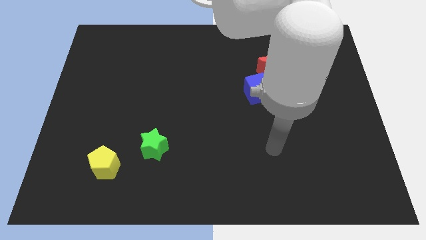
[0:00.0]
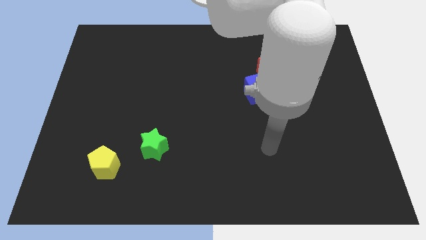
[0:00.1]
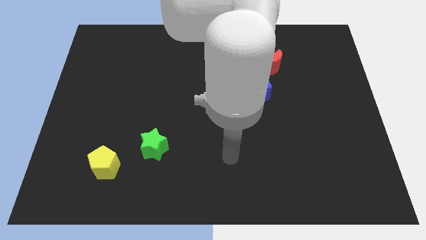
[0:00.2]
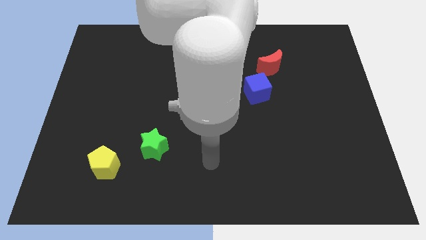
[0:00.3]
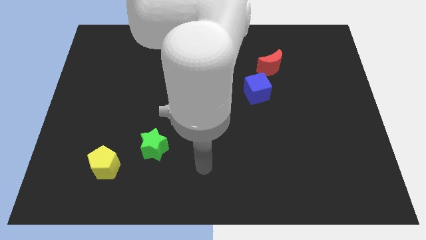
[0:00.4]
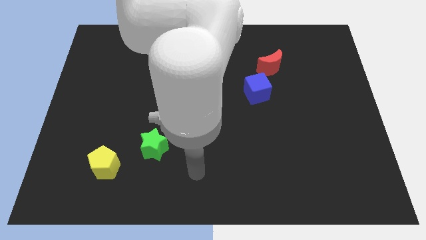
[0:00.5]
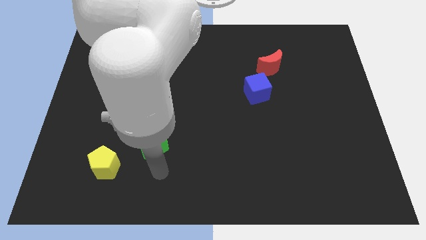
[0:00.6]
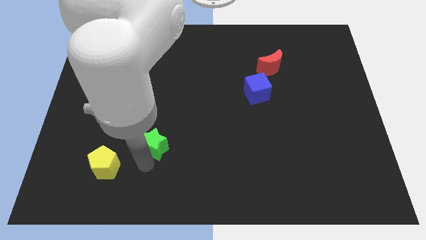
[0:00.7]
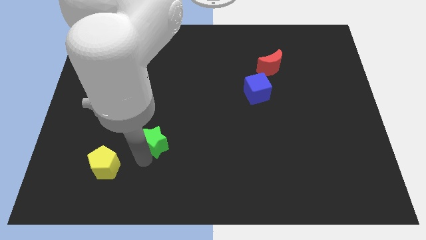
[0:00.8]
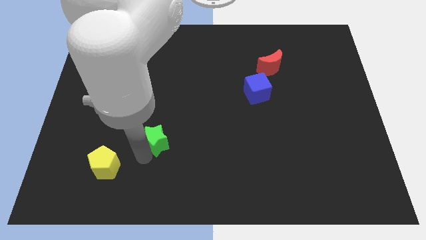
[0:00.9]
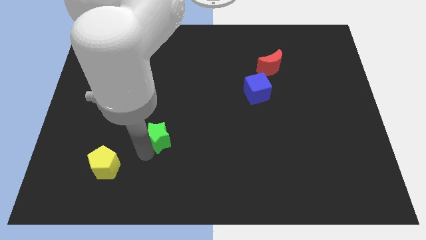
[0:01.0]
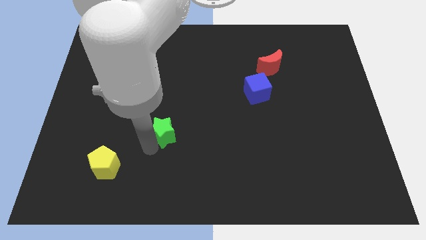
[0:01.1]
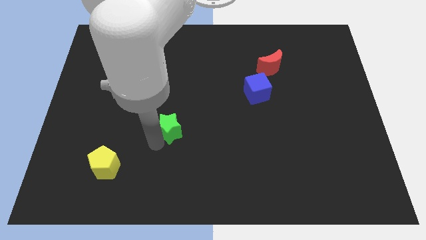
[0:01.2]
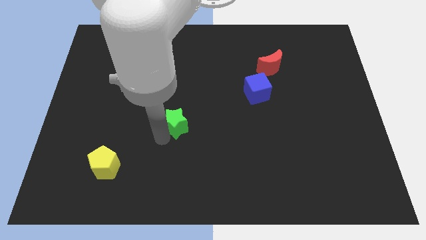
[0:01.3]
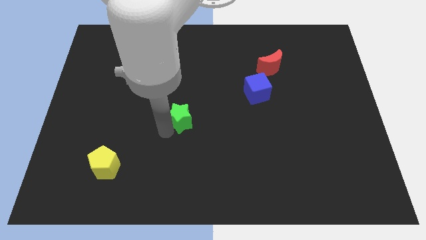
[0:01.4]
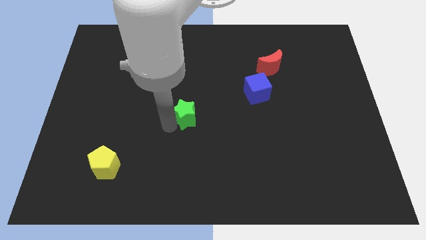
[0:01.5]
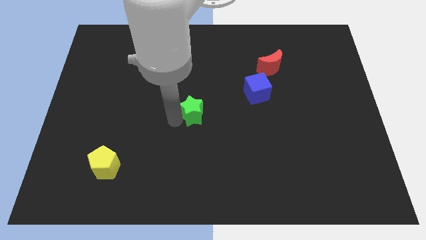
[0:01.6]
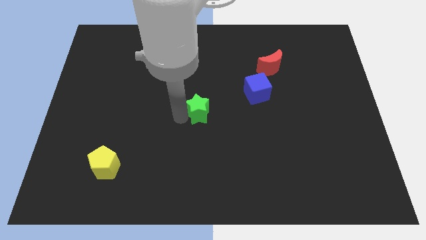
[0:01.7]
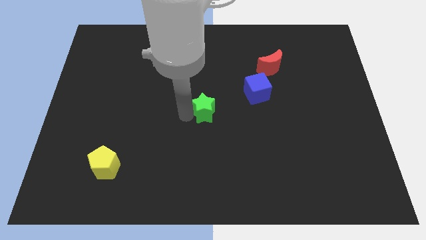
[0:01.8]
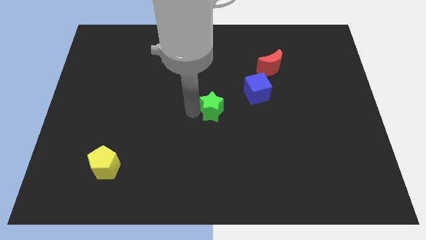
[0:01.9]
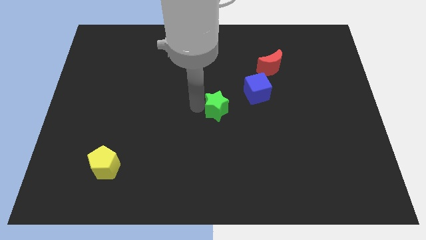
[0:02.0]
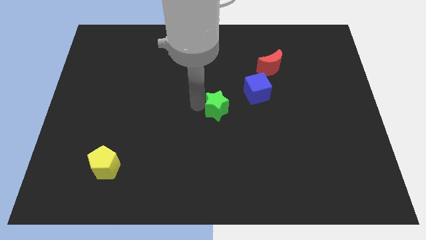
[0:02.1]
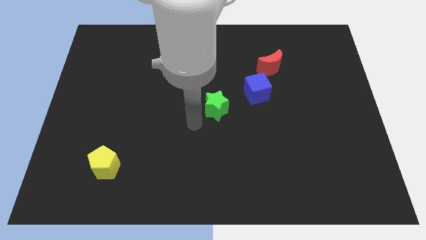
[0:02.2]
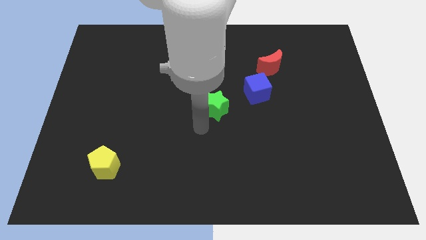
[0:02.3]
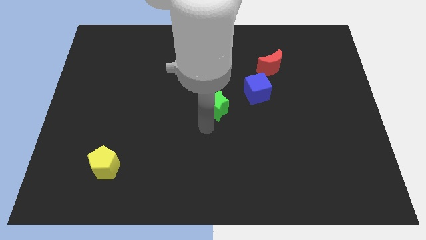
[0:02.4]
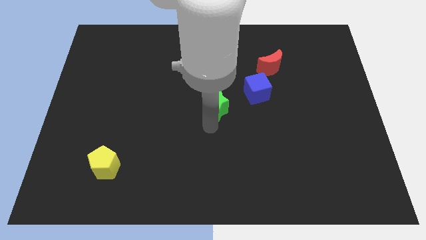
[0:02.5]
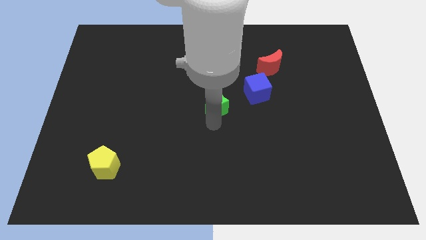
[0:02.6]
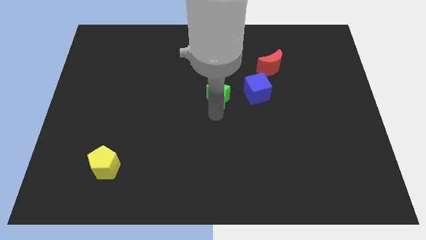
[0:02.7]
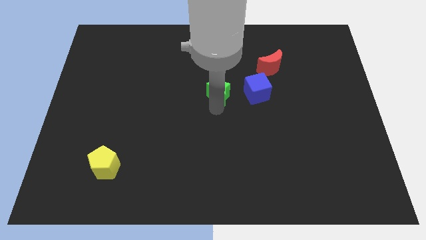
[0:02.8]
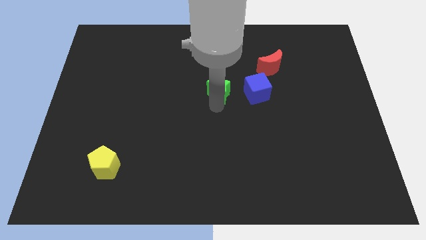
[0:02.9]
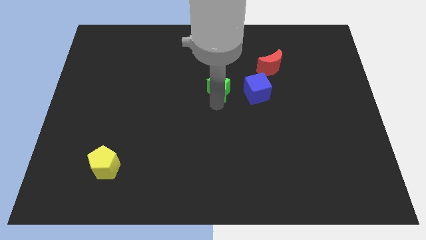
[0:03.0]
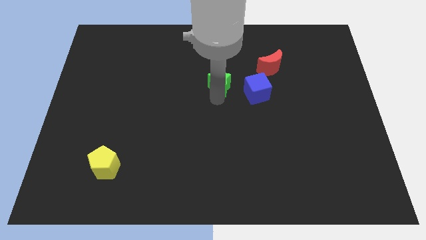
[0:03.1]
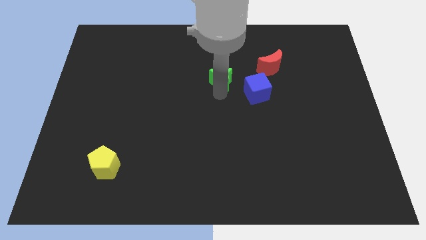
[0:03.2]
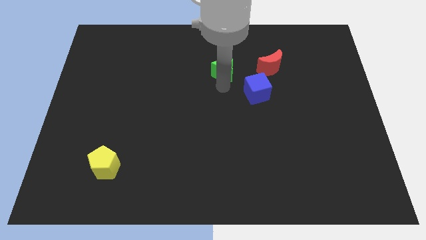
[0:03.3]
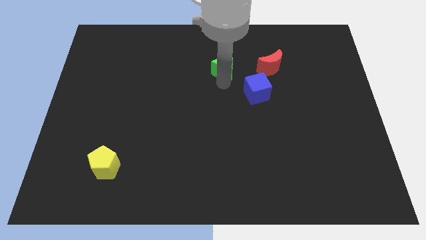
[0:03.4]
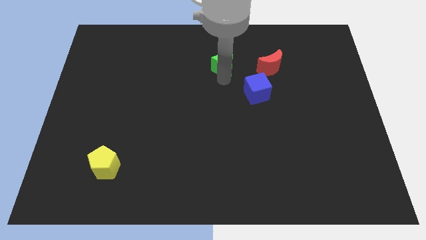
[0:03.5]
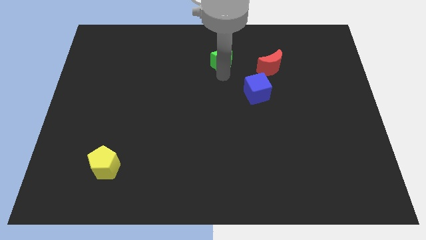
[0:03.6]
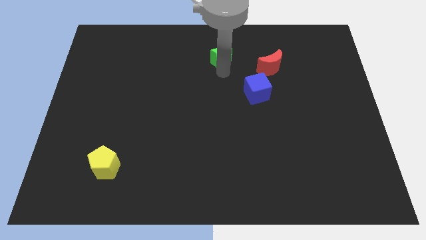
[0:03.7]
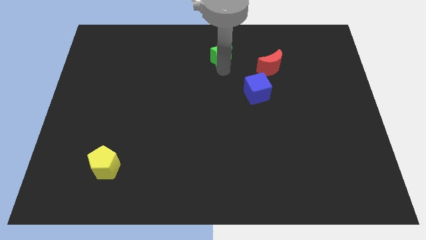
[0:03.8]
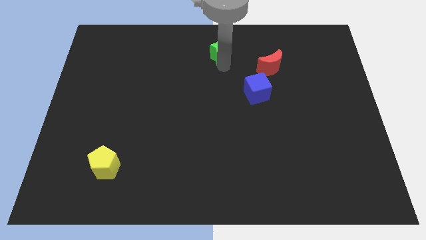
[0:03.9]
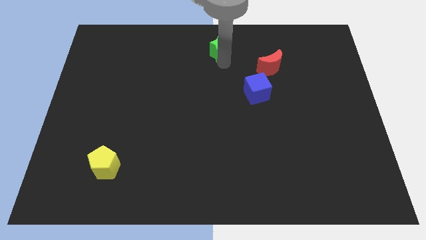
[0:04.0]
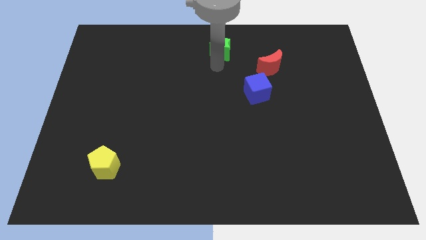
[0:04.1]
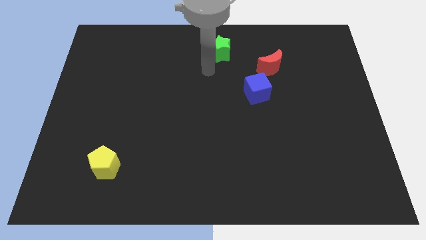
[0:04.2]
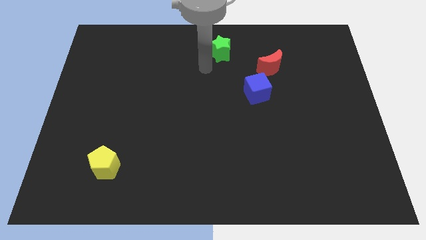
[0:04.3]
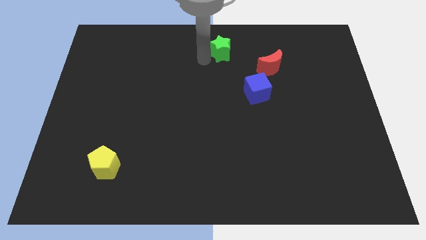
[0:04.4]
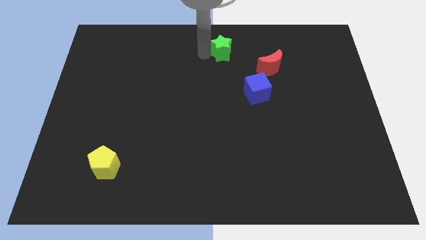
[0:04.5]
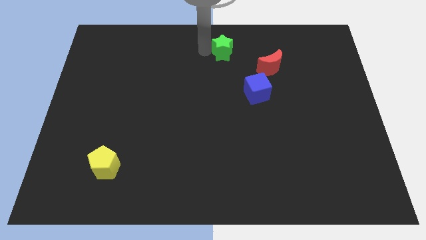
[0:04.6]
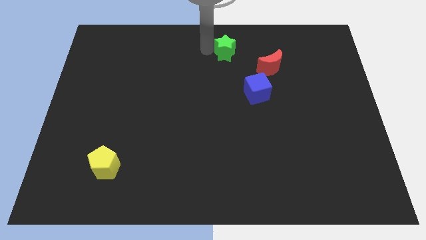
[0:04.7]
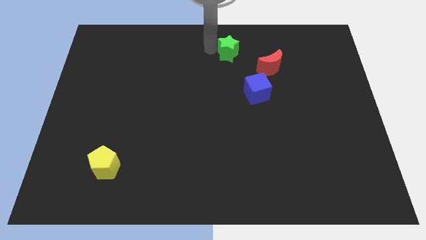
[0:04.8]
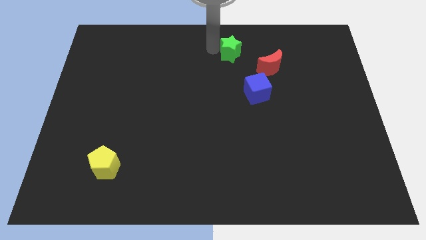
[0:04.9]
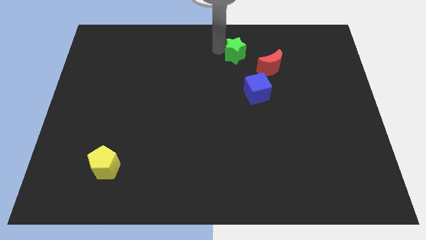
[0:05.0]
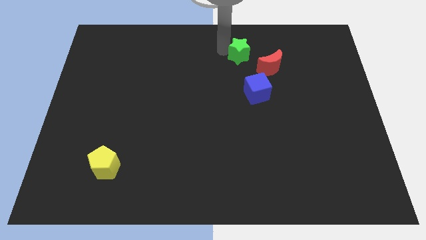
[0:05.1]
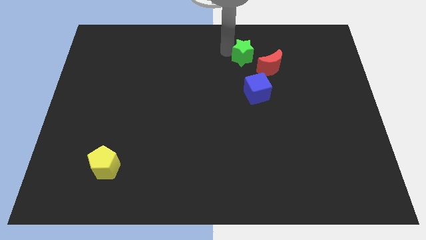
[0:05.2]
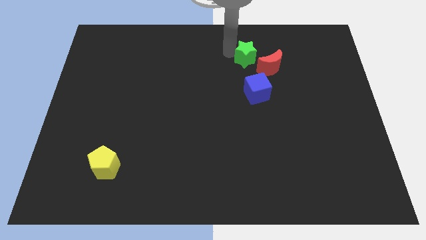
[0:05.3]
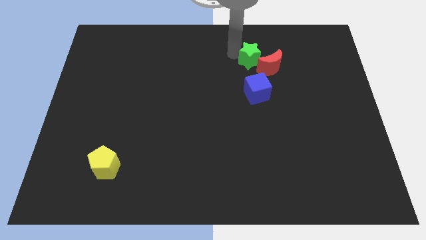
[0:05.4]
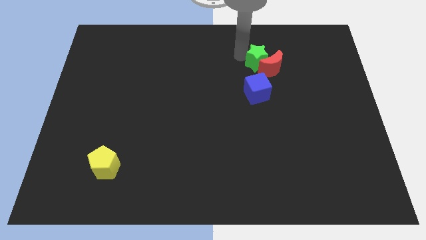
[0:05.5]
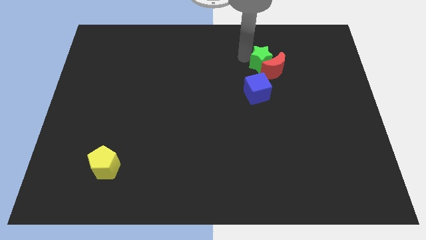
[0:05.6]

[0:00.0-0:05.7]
move the star towards the red block

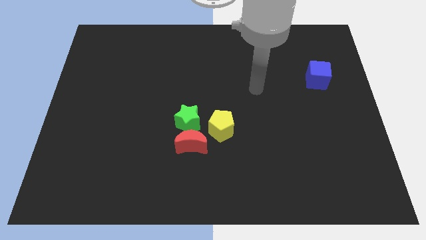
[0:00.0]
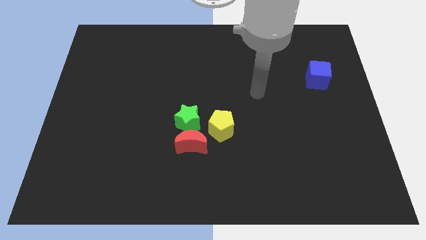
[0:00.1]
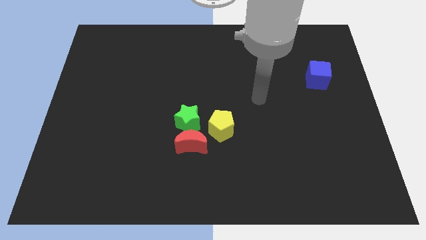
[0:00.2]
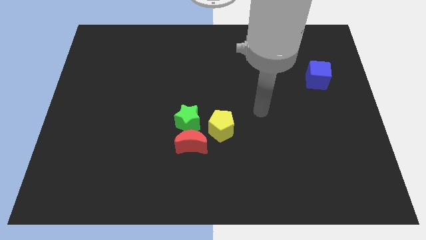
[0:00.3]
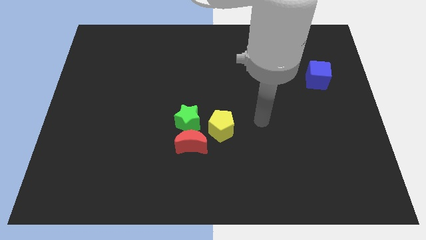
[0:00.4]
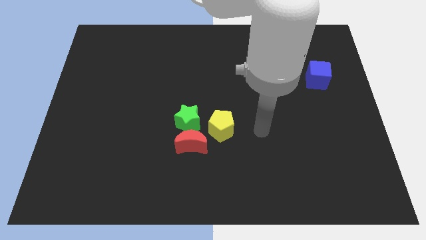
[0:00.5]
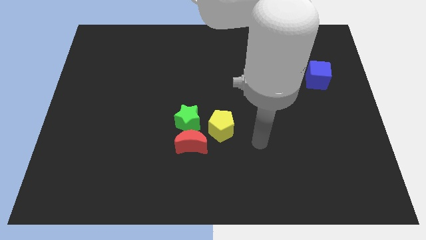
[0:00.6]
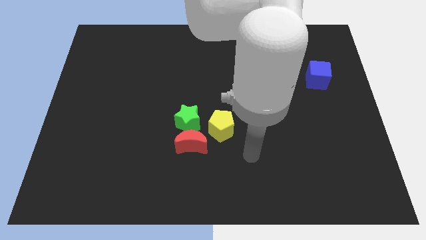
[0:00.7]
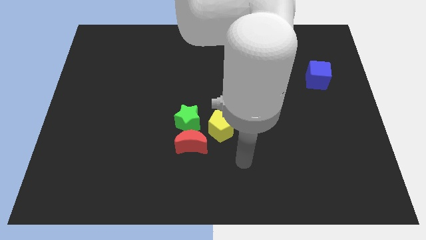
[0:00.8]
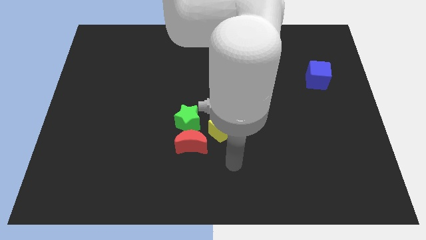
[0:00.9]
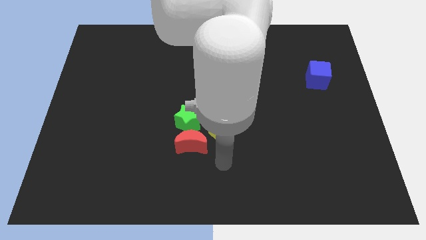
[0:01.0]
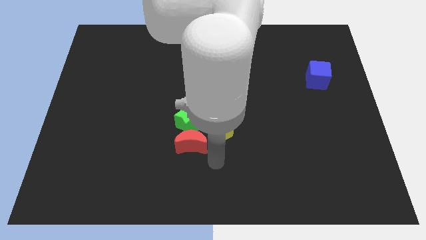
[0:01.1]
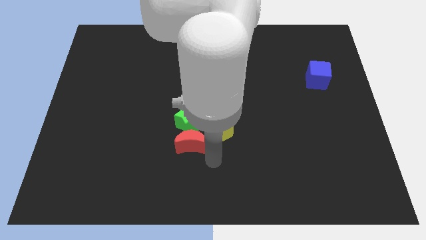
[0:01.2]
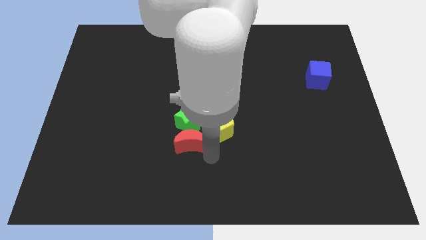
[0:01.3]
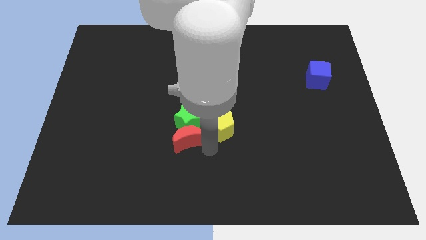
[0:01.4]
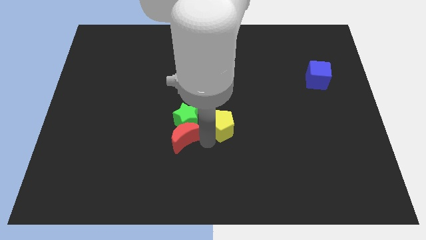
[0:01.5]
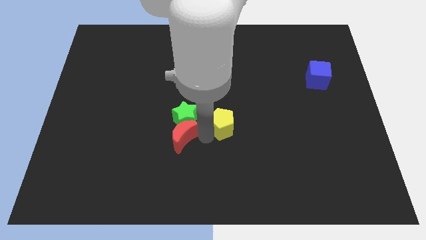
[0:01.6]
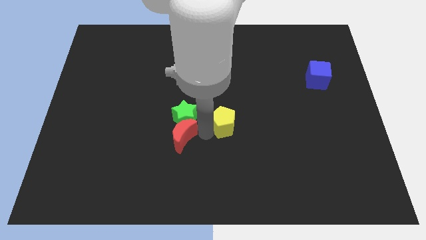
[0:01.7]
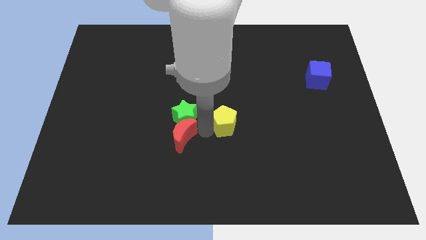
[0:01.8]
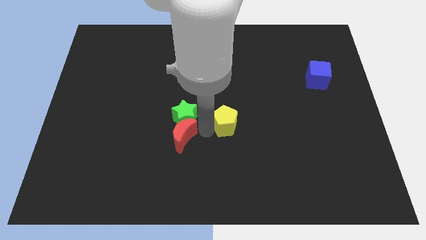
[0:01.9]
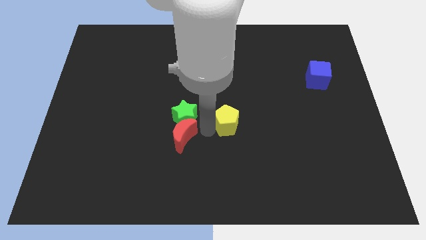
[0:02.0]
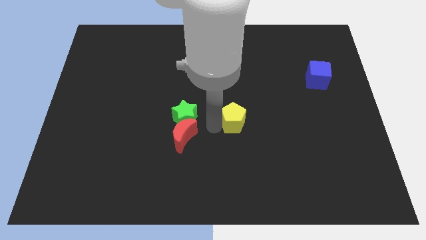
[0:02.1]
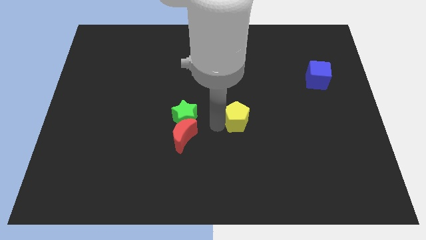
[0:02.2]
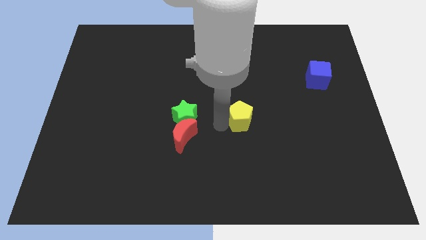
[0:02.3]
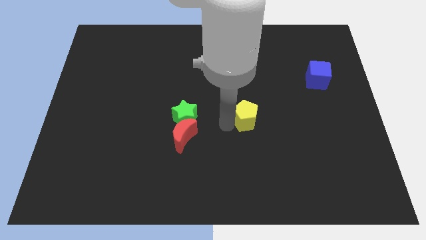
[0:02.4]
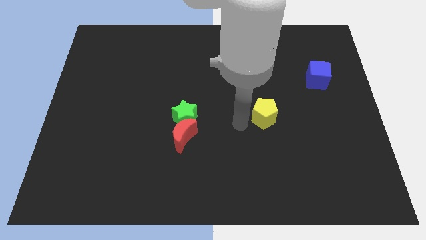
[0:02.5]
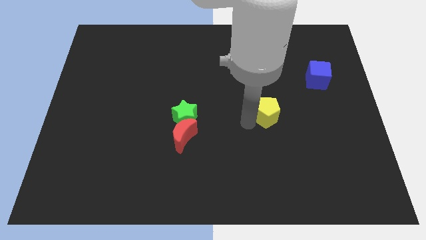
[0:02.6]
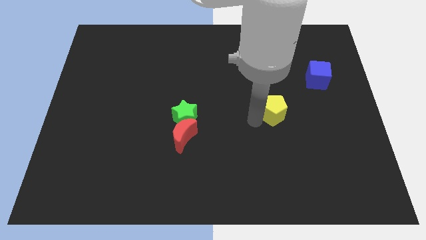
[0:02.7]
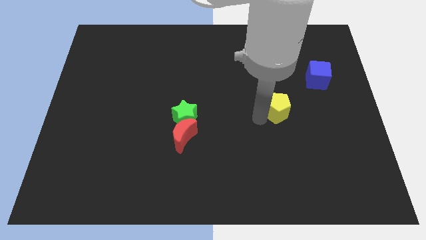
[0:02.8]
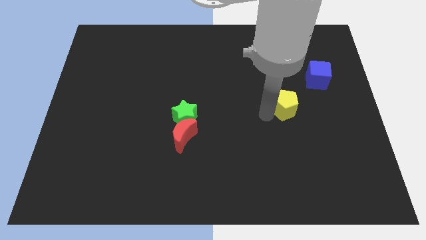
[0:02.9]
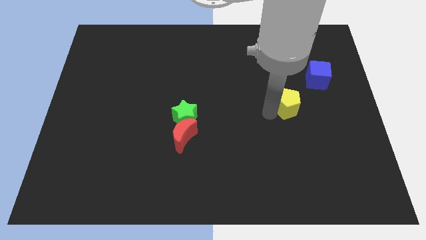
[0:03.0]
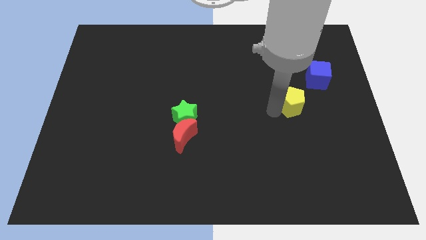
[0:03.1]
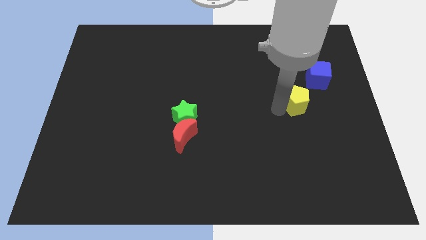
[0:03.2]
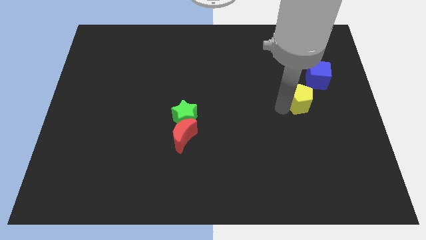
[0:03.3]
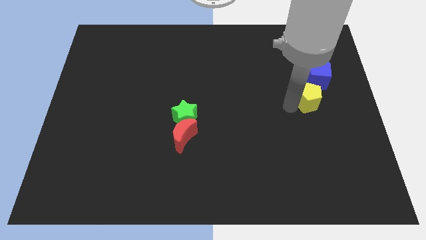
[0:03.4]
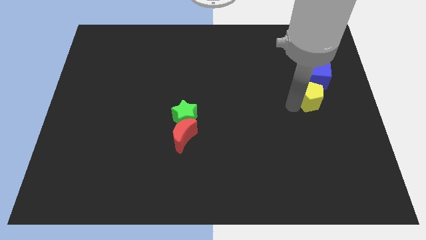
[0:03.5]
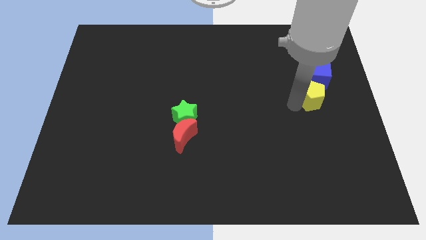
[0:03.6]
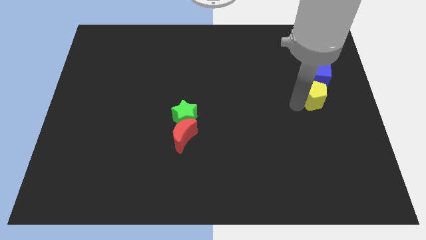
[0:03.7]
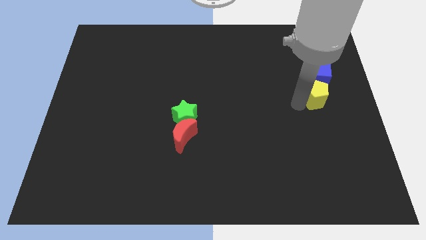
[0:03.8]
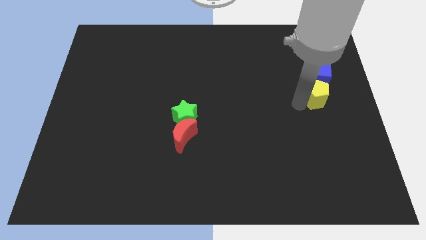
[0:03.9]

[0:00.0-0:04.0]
slide the yellow pentagon close to the blue block
